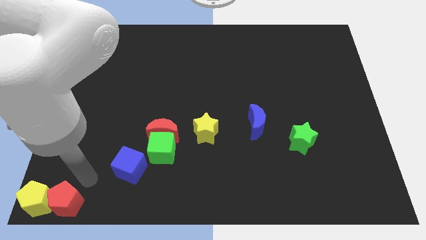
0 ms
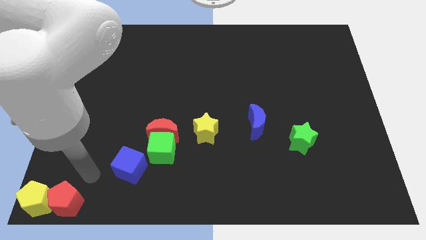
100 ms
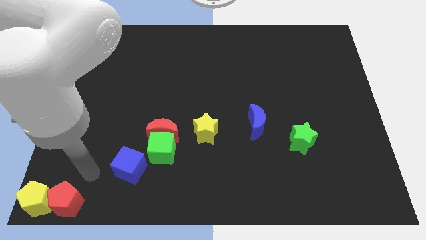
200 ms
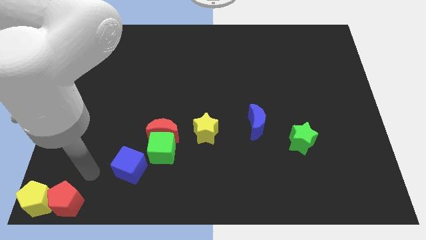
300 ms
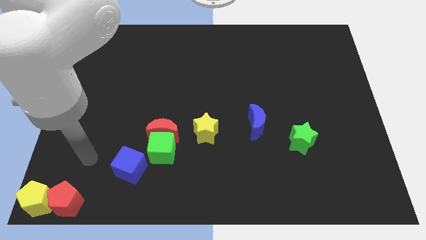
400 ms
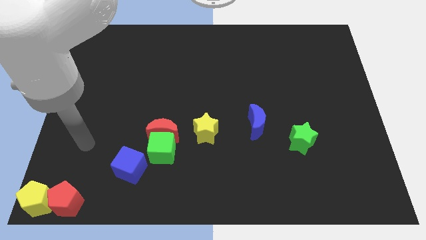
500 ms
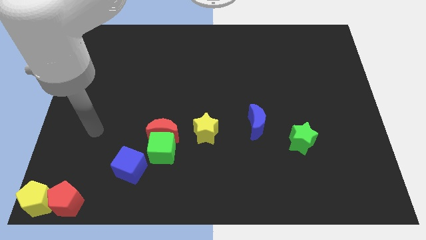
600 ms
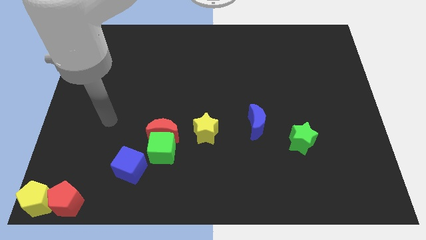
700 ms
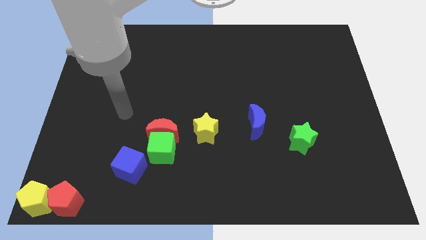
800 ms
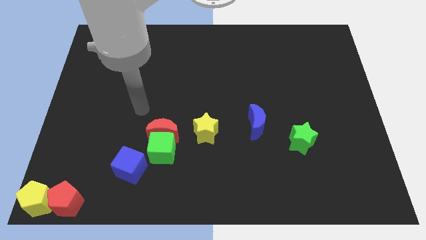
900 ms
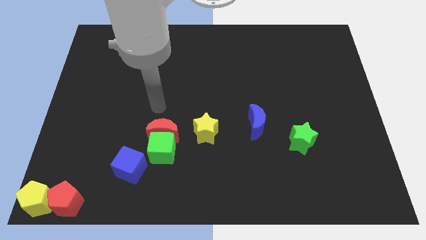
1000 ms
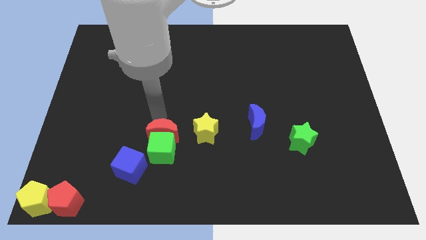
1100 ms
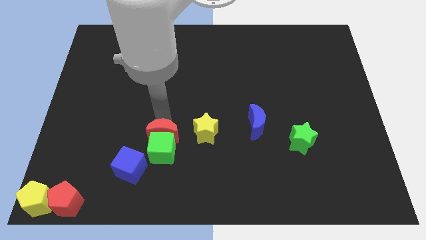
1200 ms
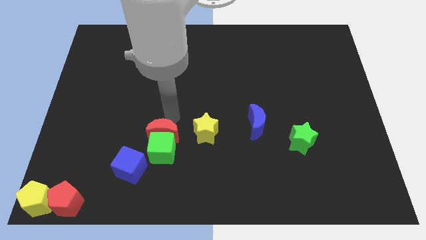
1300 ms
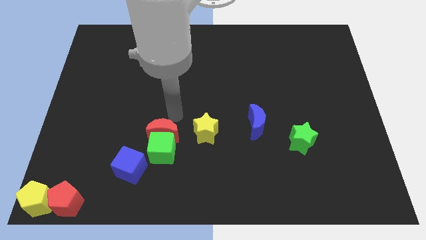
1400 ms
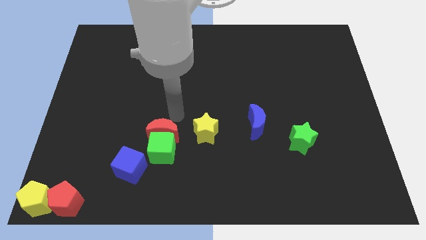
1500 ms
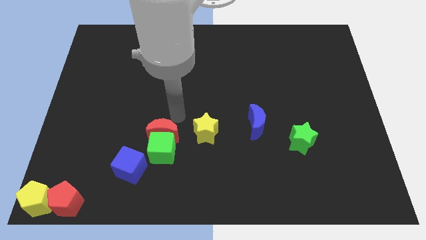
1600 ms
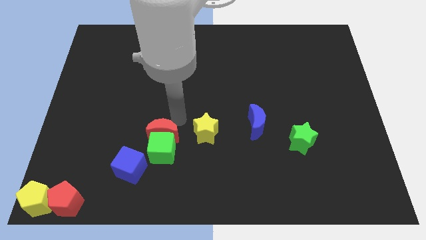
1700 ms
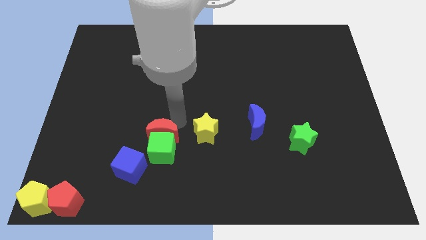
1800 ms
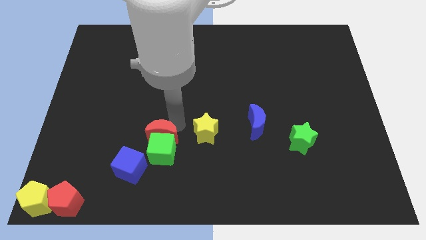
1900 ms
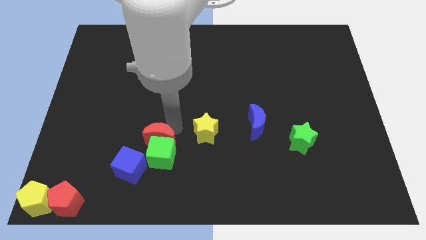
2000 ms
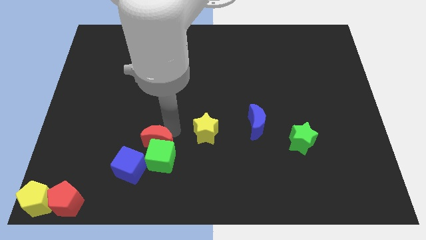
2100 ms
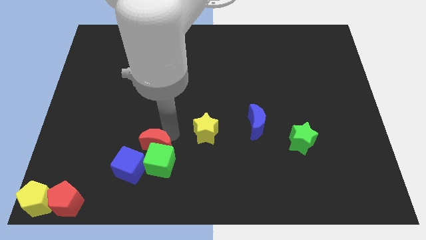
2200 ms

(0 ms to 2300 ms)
move the arm above the red moon

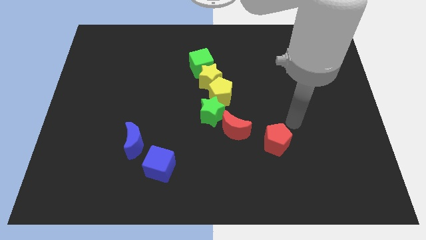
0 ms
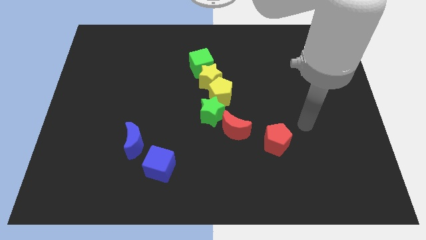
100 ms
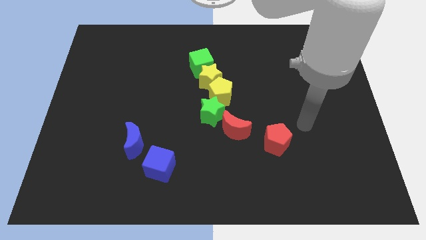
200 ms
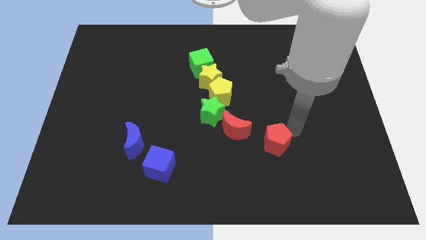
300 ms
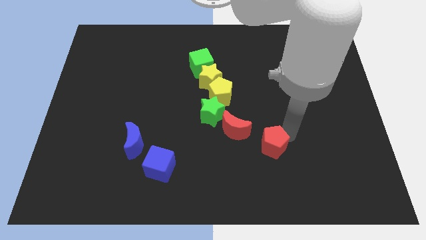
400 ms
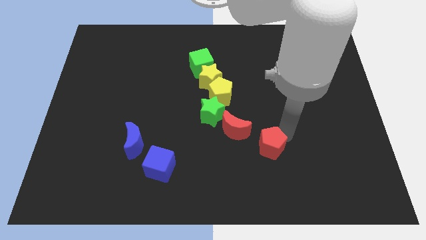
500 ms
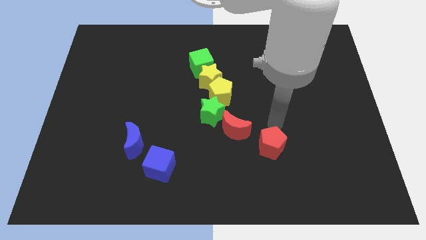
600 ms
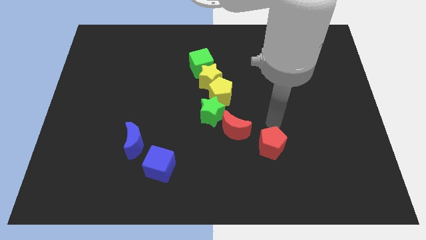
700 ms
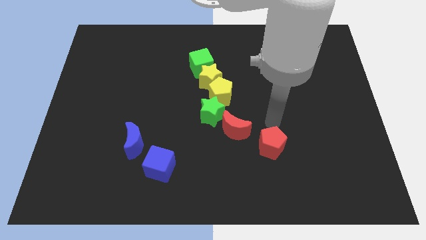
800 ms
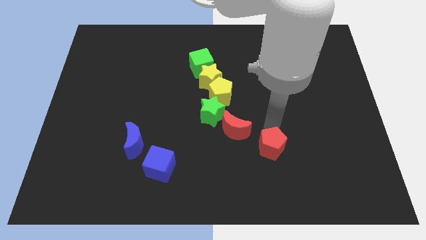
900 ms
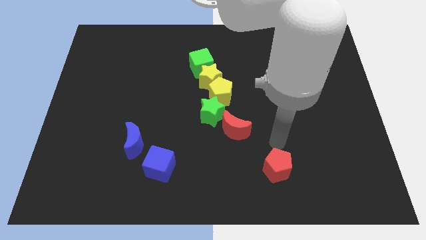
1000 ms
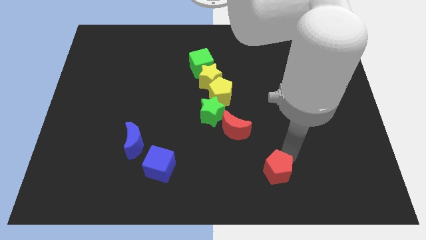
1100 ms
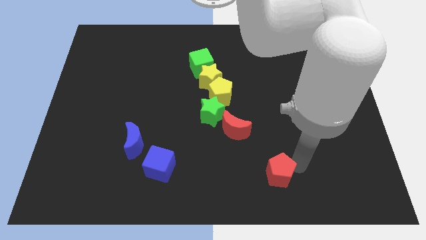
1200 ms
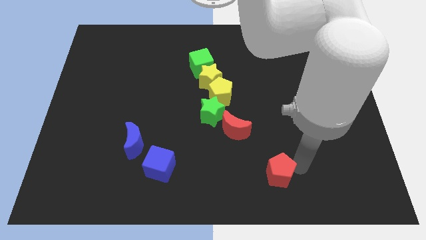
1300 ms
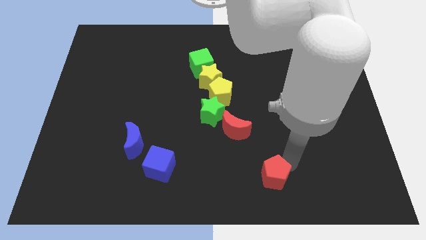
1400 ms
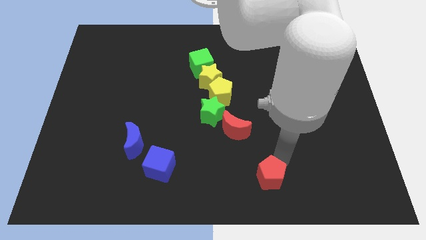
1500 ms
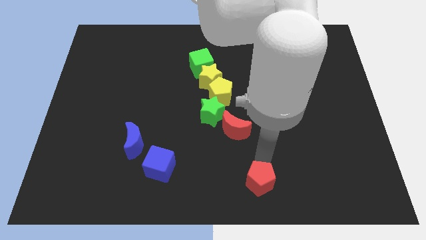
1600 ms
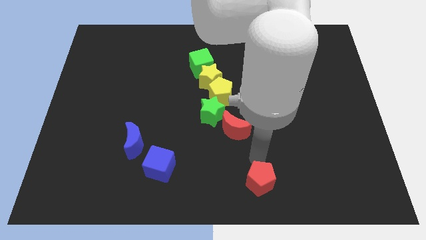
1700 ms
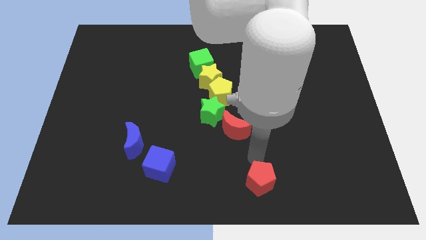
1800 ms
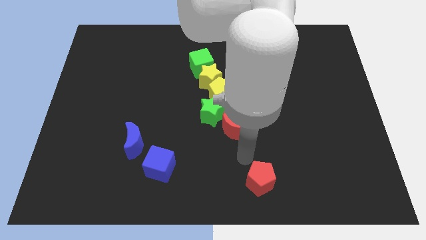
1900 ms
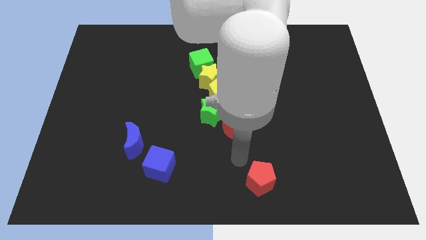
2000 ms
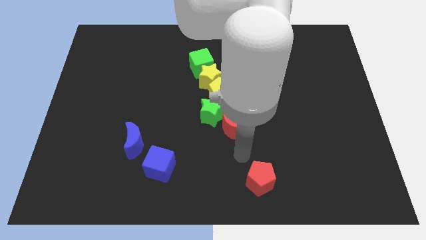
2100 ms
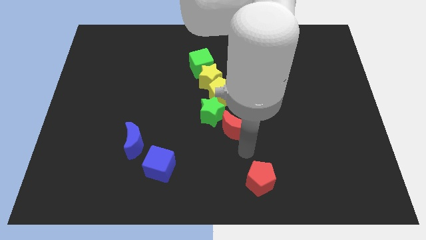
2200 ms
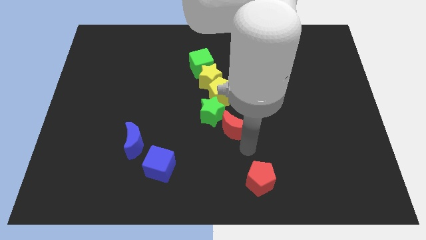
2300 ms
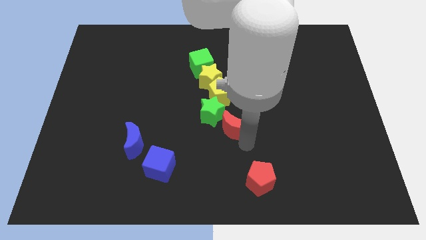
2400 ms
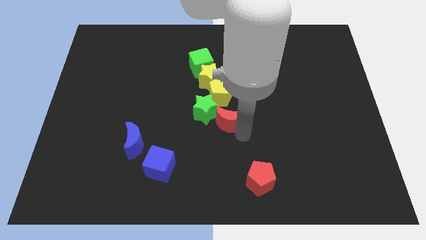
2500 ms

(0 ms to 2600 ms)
move red pentagon at the bottom side of the red crescent

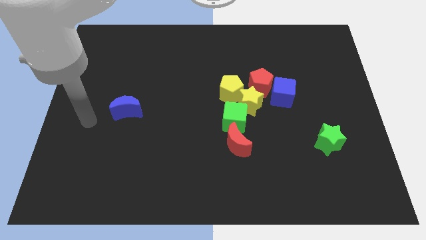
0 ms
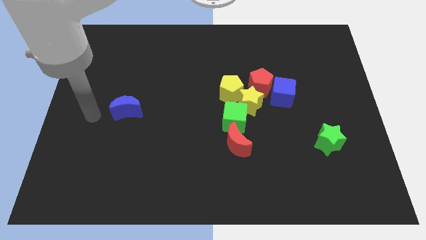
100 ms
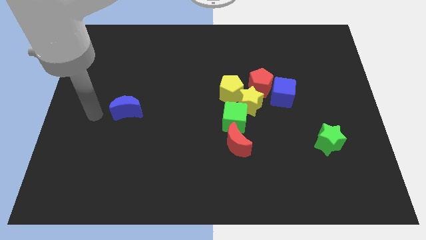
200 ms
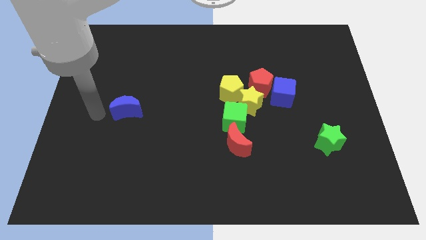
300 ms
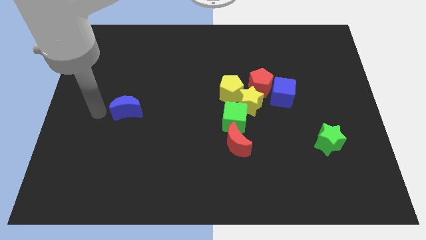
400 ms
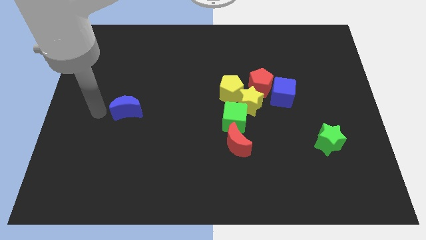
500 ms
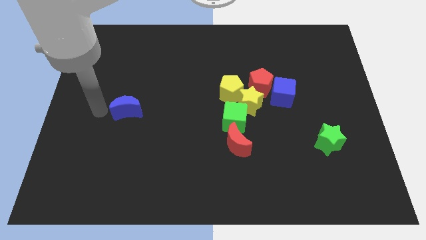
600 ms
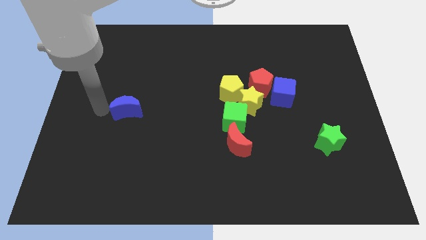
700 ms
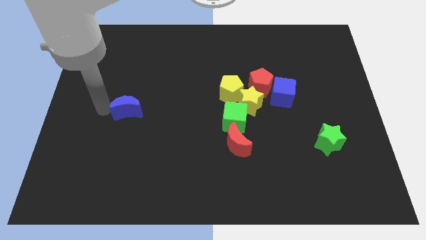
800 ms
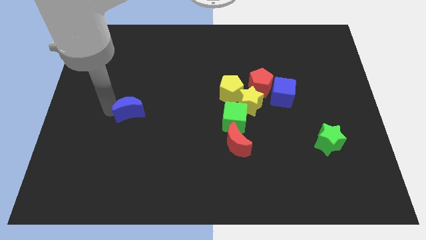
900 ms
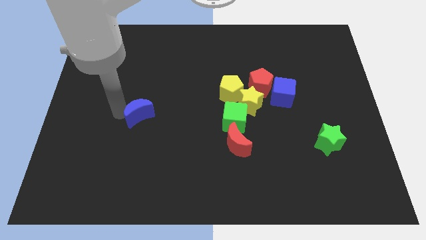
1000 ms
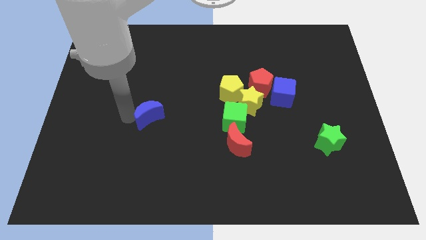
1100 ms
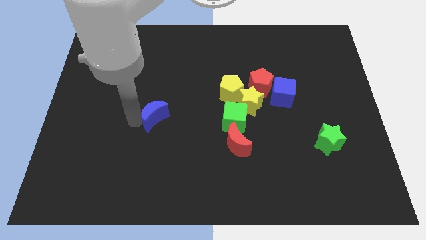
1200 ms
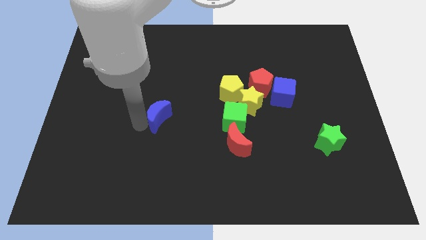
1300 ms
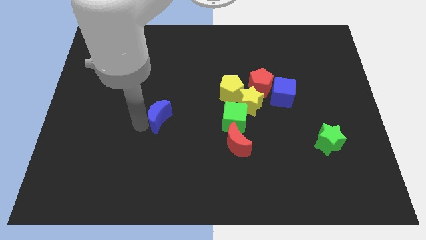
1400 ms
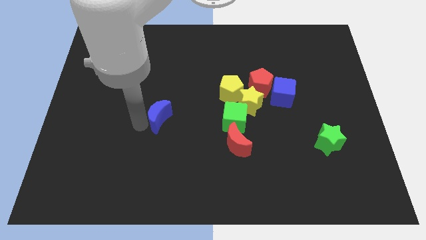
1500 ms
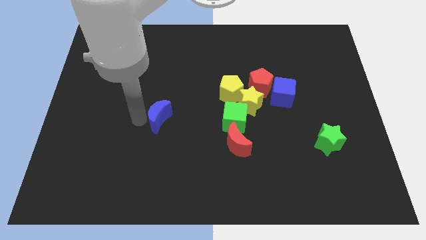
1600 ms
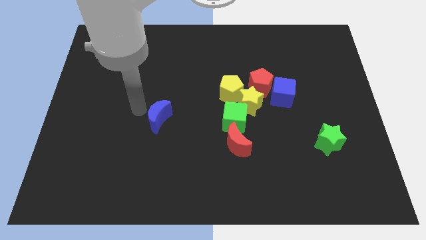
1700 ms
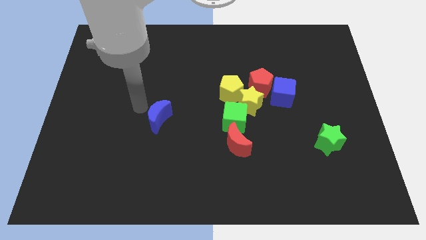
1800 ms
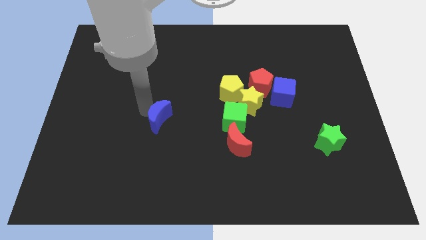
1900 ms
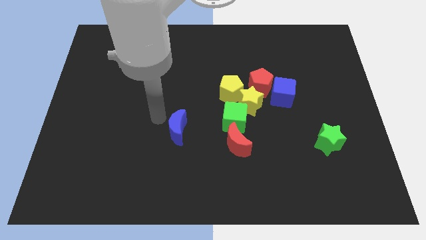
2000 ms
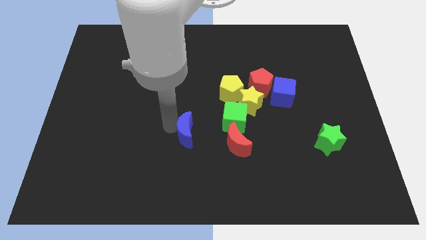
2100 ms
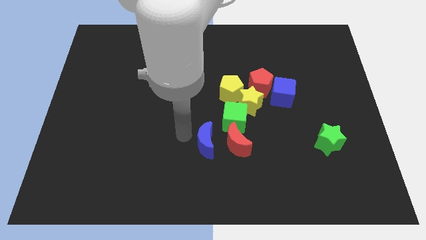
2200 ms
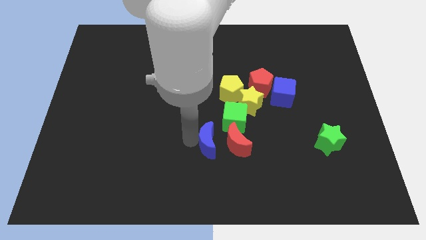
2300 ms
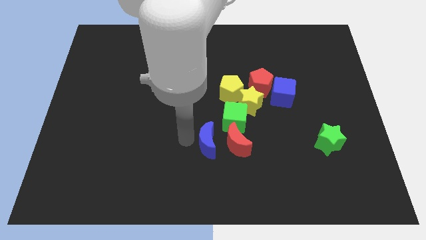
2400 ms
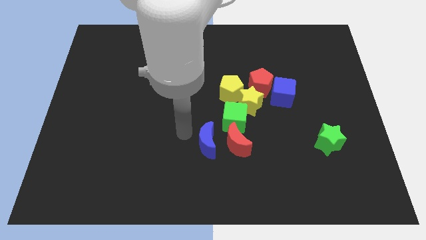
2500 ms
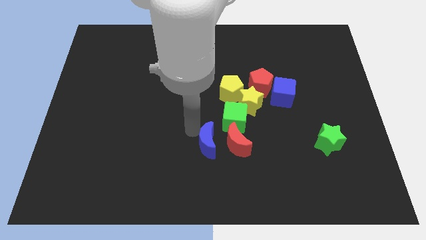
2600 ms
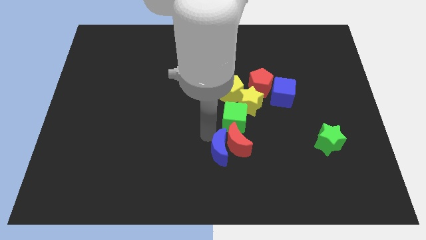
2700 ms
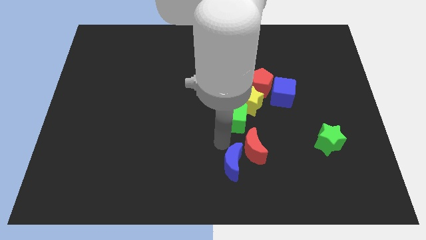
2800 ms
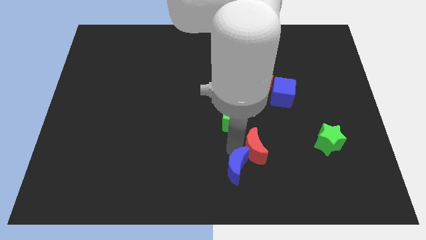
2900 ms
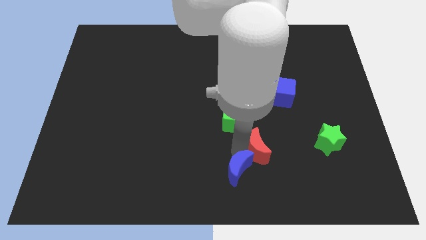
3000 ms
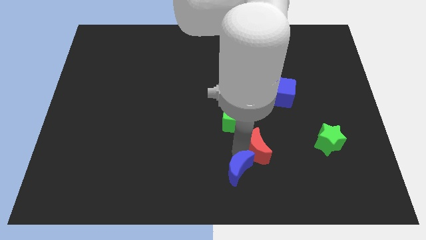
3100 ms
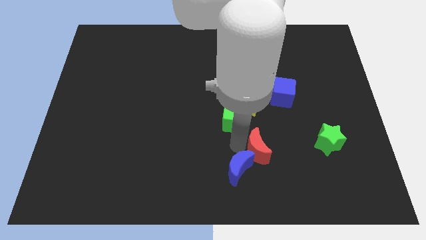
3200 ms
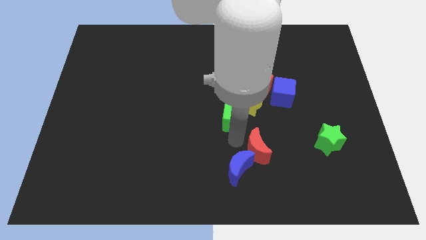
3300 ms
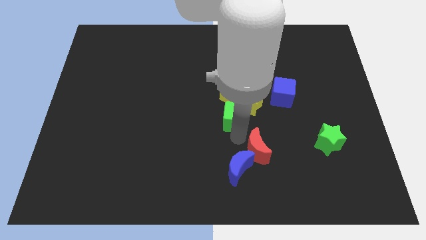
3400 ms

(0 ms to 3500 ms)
push the blue crescent to the bottom side of the red crescent

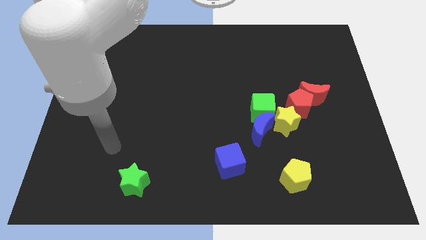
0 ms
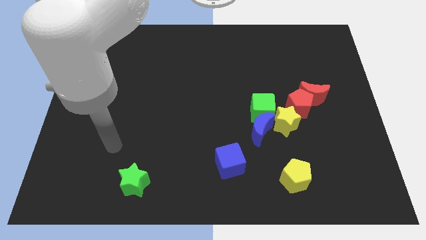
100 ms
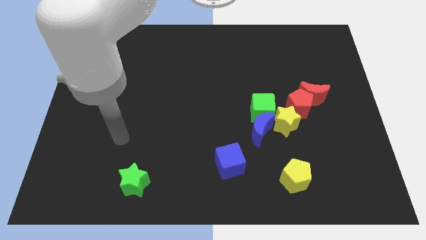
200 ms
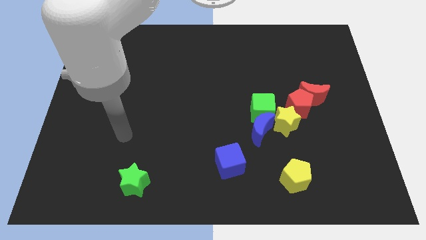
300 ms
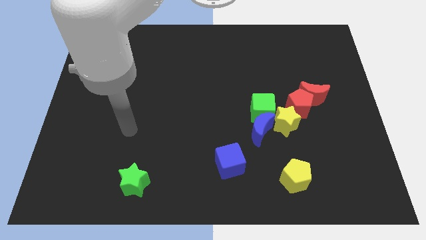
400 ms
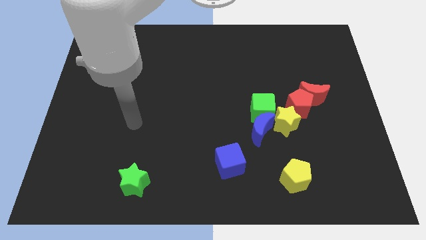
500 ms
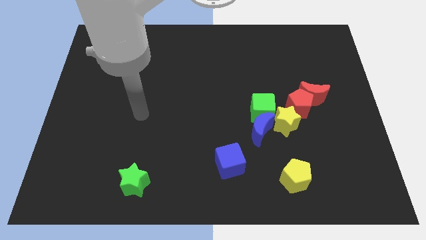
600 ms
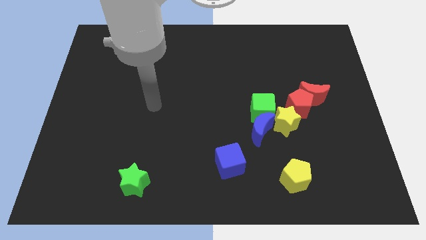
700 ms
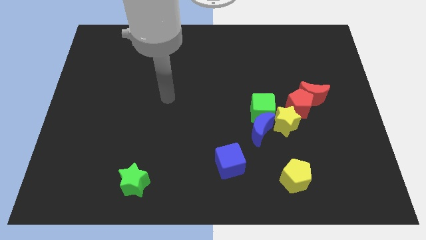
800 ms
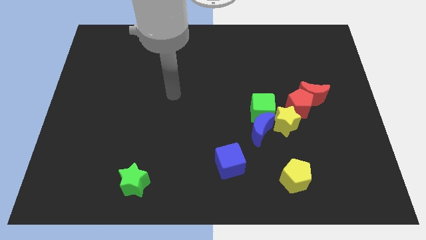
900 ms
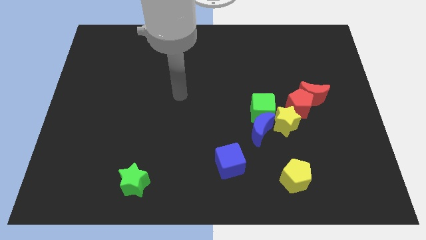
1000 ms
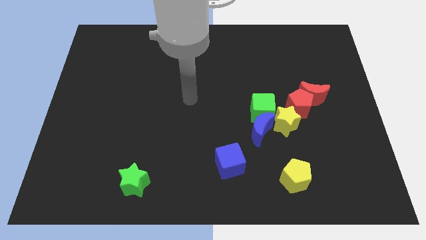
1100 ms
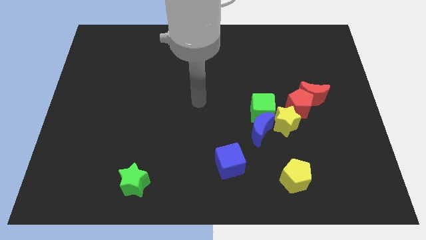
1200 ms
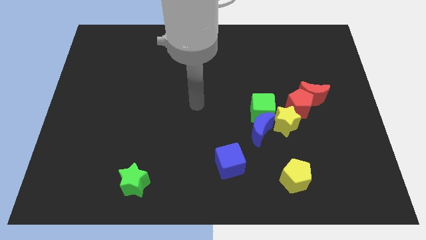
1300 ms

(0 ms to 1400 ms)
move your arm to the center
